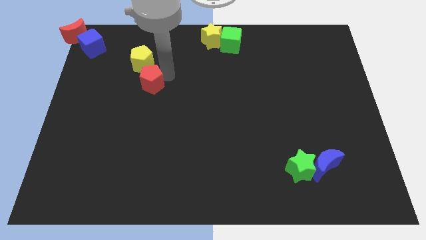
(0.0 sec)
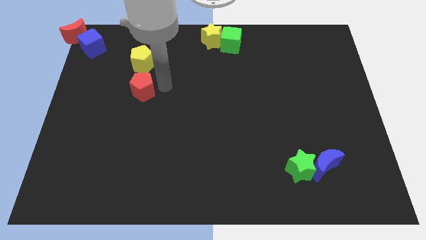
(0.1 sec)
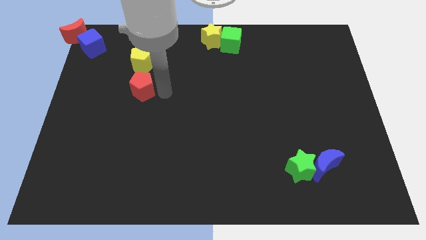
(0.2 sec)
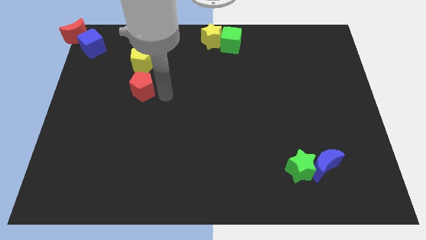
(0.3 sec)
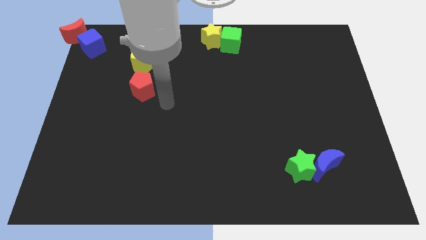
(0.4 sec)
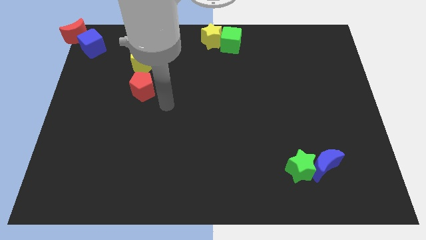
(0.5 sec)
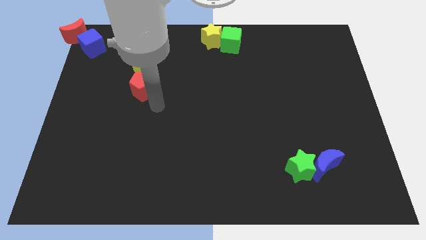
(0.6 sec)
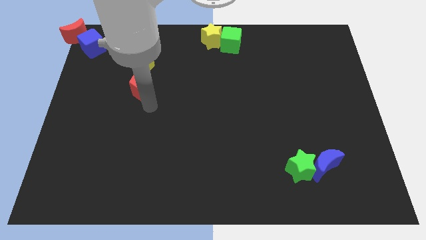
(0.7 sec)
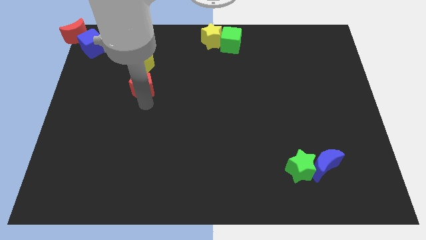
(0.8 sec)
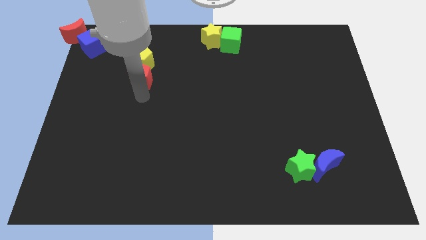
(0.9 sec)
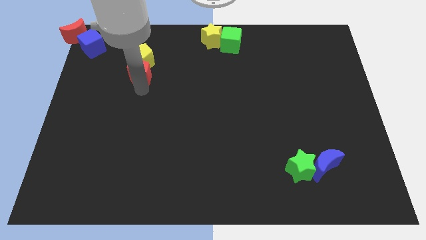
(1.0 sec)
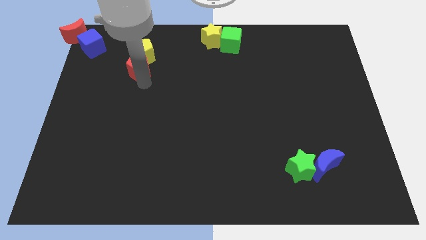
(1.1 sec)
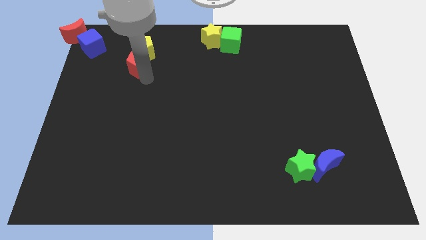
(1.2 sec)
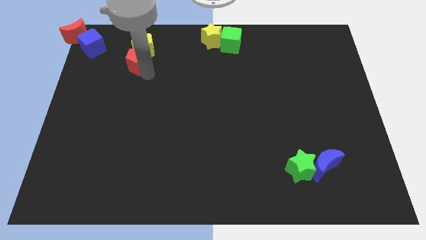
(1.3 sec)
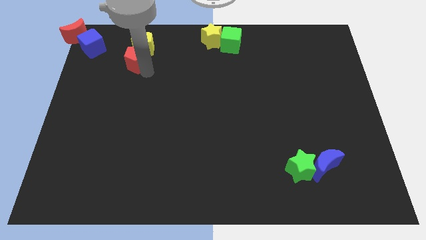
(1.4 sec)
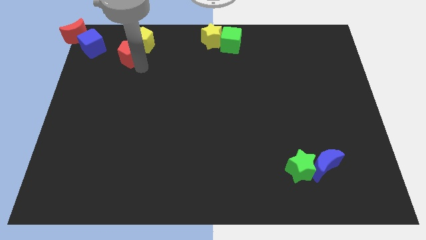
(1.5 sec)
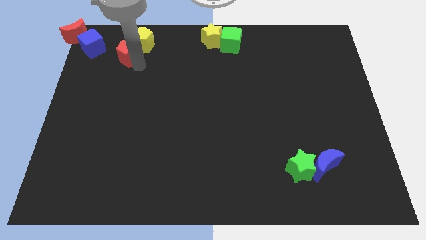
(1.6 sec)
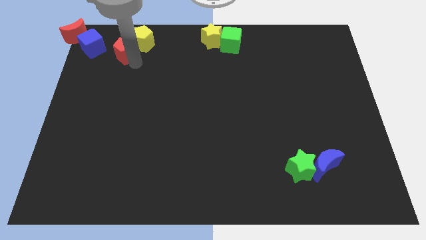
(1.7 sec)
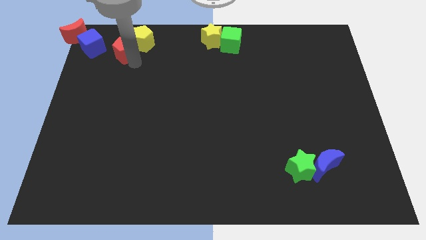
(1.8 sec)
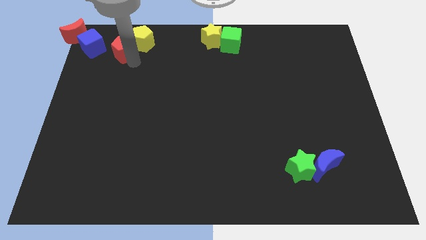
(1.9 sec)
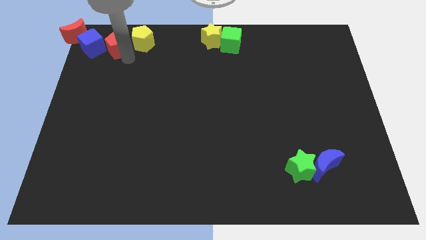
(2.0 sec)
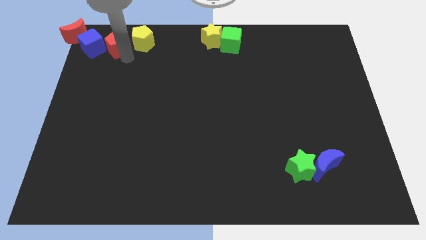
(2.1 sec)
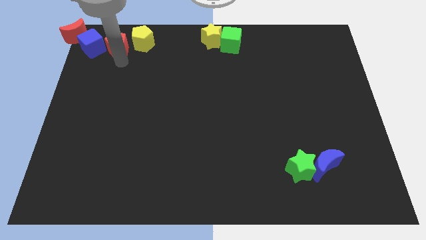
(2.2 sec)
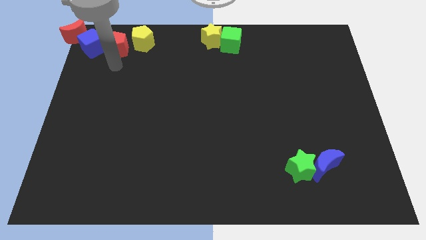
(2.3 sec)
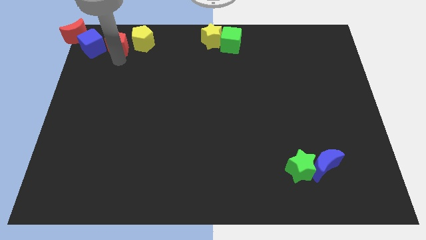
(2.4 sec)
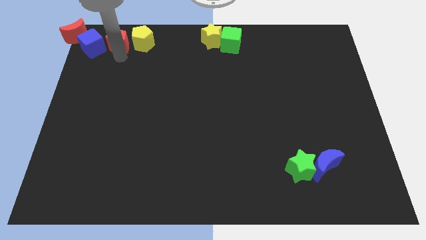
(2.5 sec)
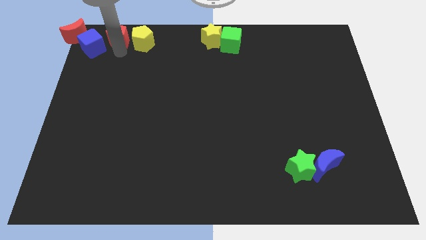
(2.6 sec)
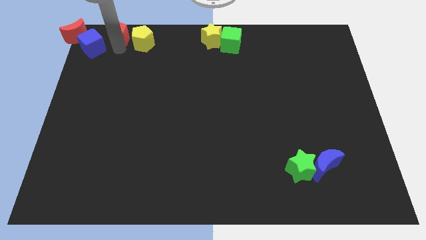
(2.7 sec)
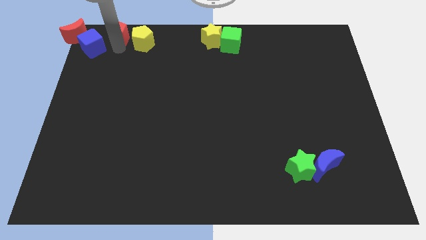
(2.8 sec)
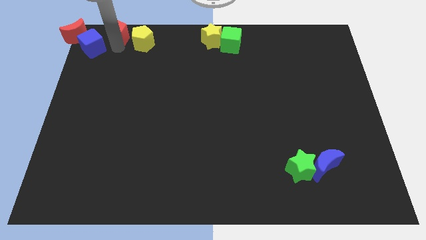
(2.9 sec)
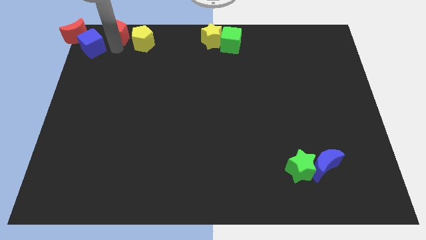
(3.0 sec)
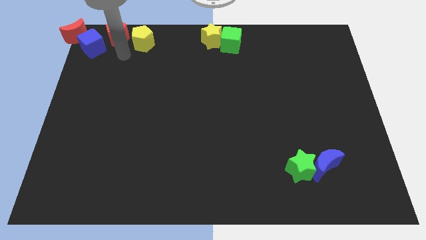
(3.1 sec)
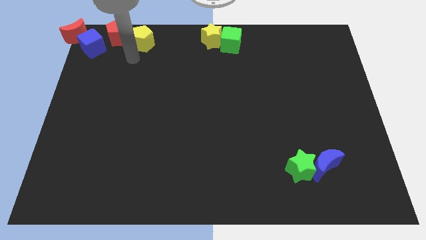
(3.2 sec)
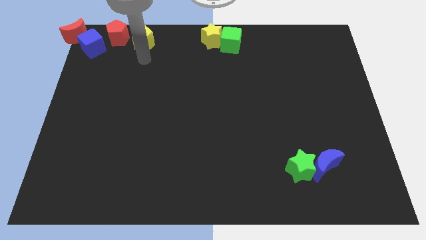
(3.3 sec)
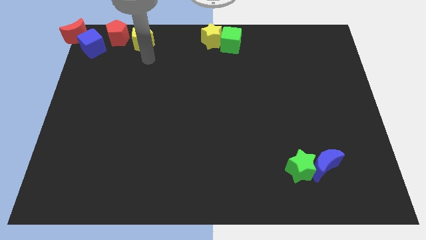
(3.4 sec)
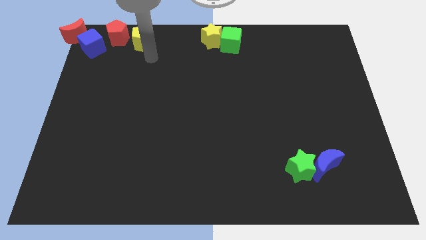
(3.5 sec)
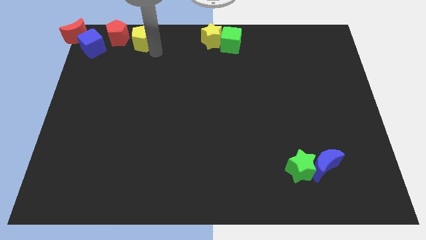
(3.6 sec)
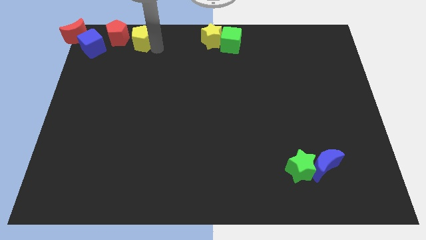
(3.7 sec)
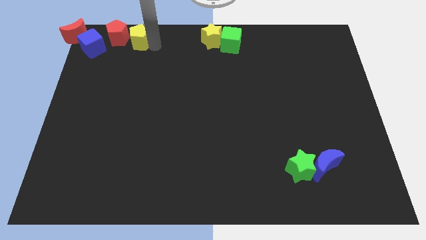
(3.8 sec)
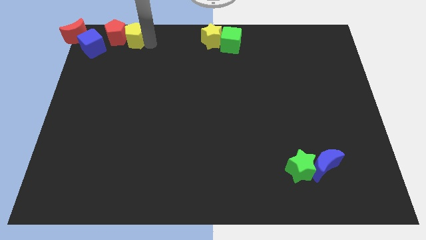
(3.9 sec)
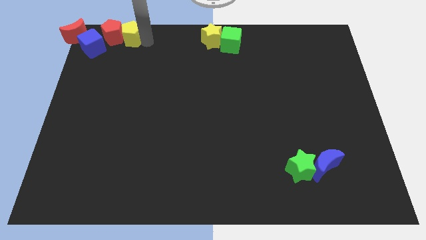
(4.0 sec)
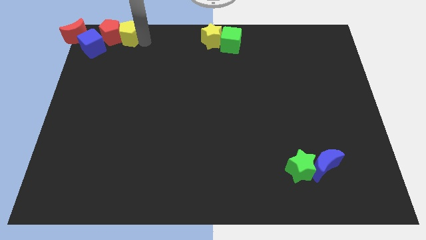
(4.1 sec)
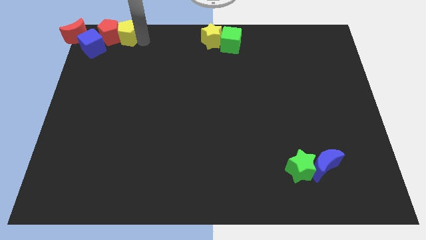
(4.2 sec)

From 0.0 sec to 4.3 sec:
place the pentagons at the top left corner of the board

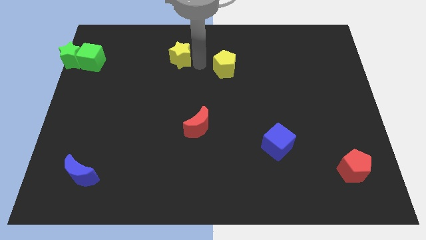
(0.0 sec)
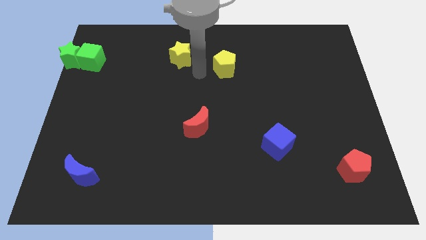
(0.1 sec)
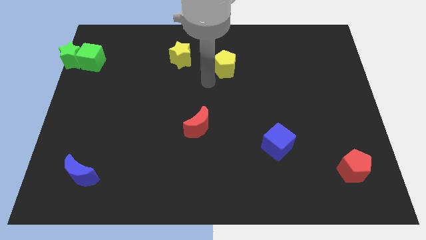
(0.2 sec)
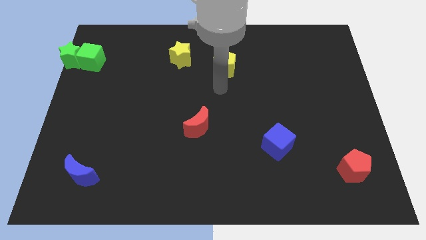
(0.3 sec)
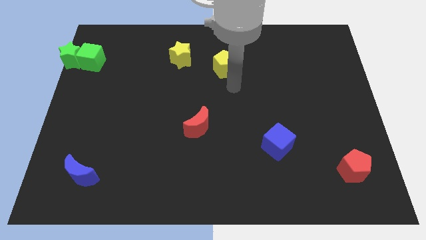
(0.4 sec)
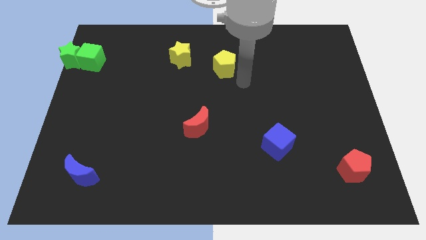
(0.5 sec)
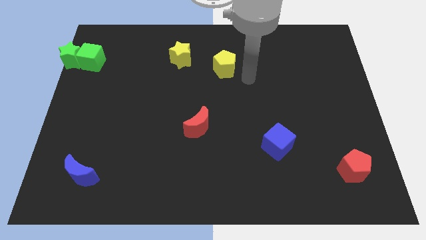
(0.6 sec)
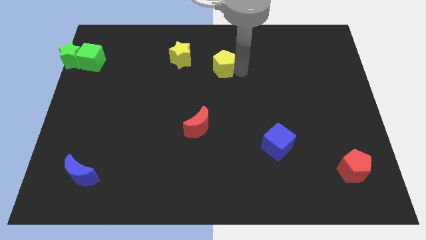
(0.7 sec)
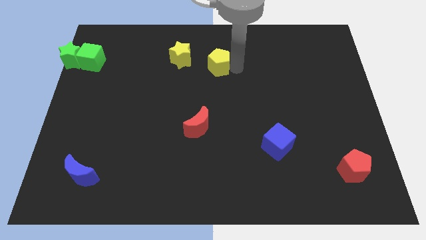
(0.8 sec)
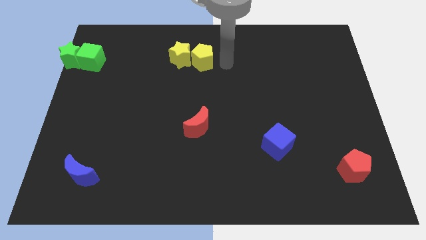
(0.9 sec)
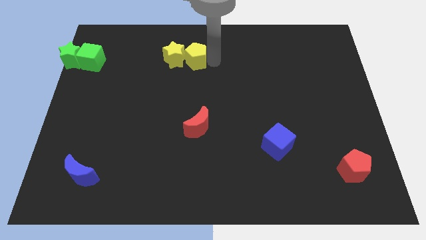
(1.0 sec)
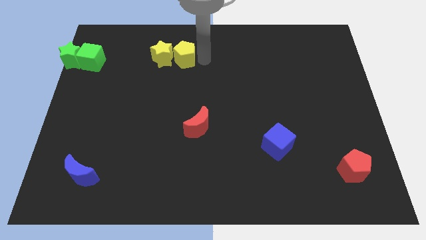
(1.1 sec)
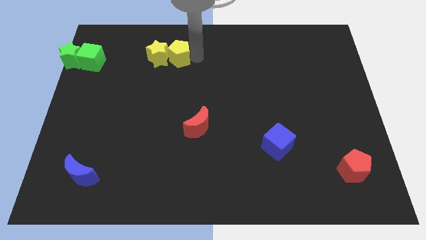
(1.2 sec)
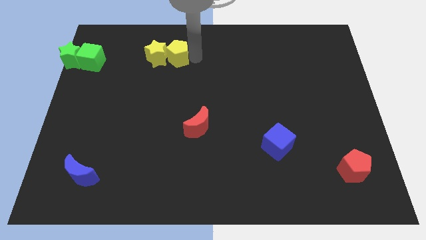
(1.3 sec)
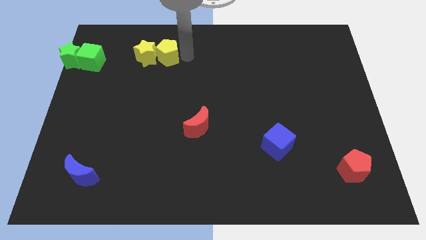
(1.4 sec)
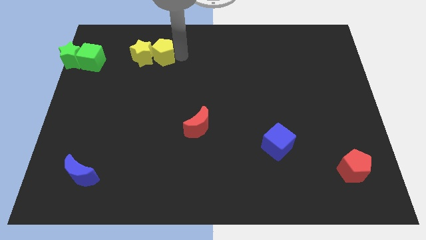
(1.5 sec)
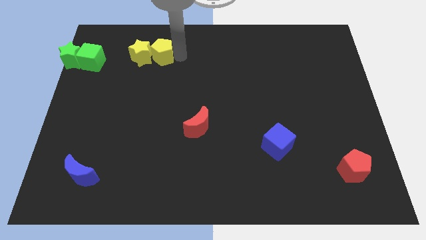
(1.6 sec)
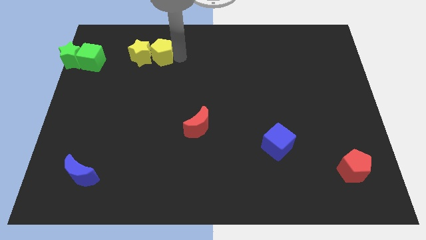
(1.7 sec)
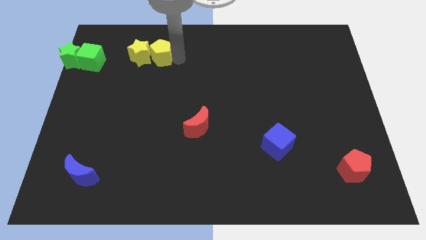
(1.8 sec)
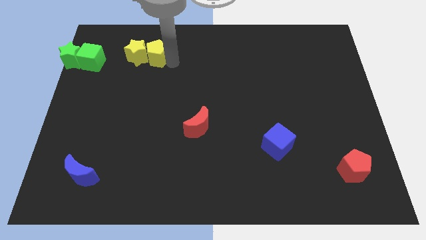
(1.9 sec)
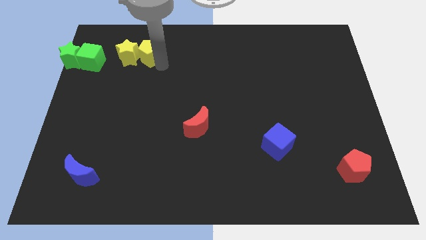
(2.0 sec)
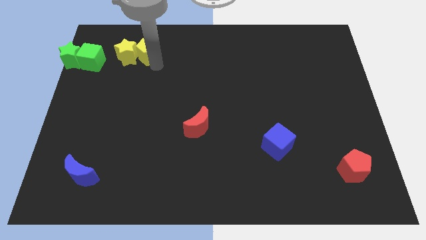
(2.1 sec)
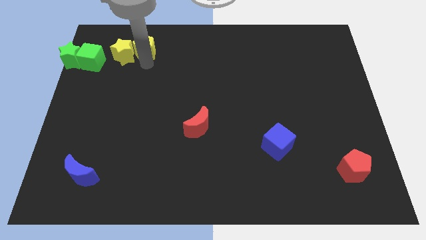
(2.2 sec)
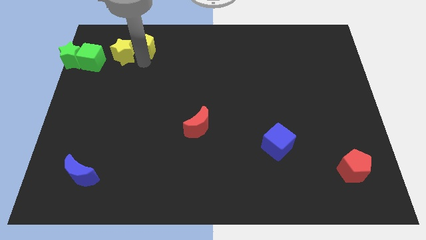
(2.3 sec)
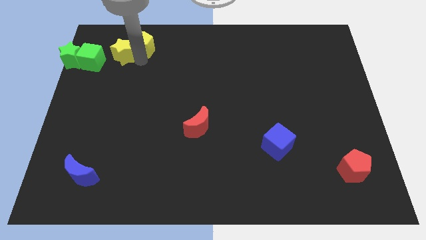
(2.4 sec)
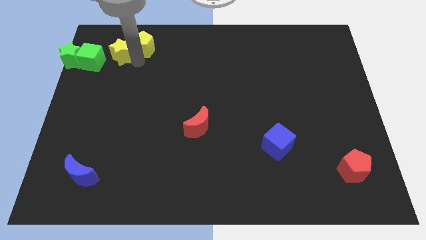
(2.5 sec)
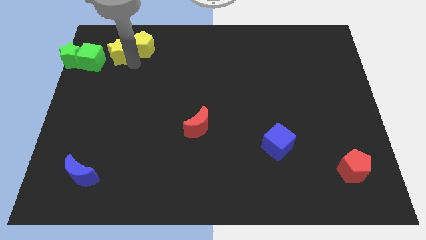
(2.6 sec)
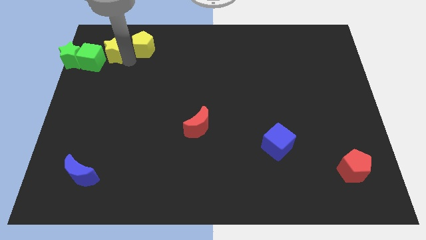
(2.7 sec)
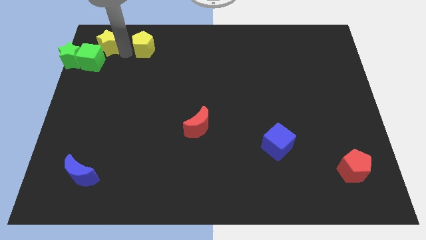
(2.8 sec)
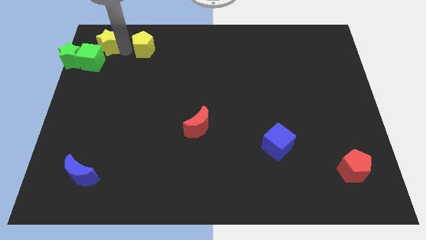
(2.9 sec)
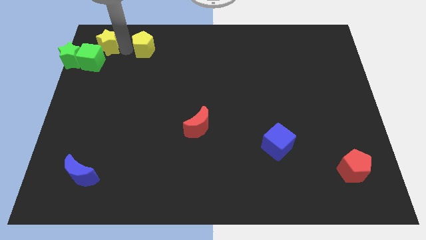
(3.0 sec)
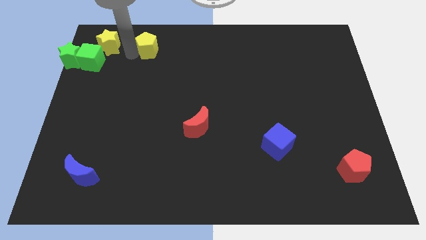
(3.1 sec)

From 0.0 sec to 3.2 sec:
push yellow star along with yellow pentagon towards top left corner

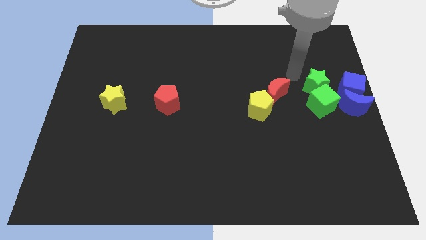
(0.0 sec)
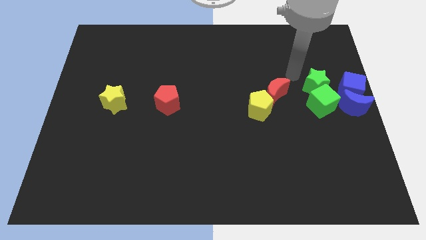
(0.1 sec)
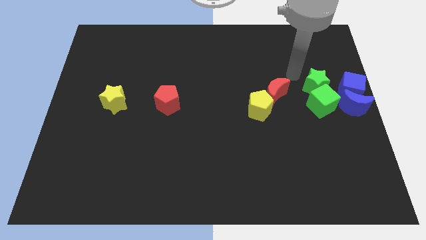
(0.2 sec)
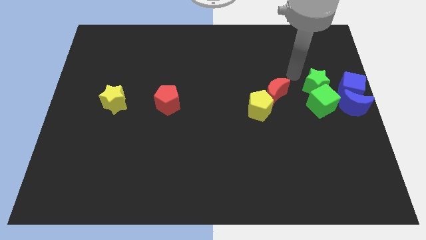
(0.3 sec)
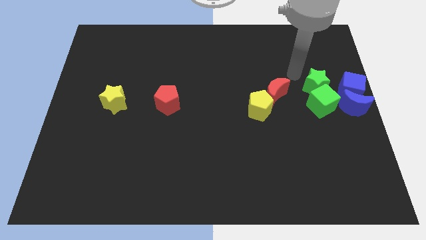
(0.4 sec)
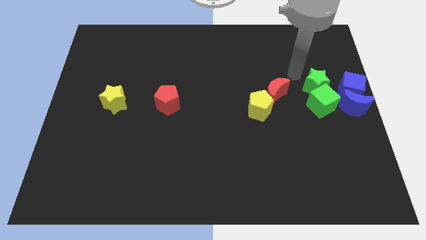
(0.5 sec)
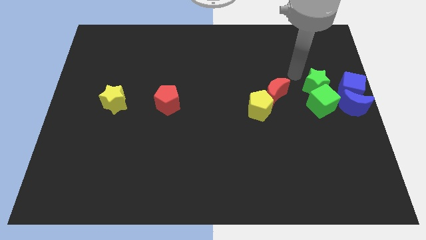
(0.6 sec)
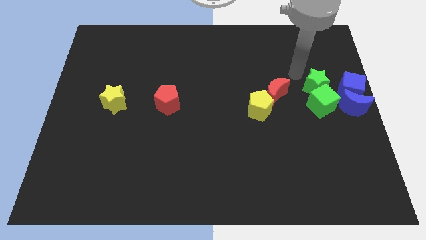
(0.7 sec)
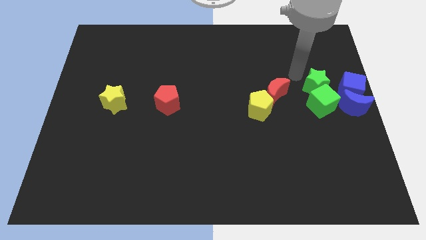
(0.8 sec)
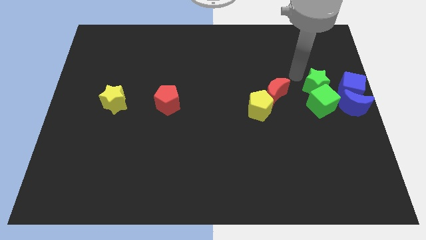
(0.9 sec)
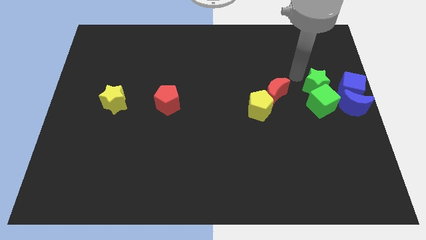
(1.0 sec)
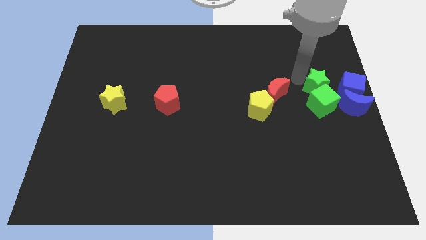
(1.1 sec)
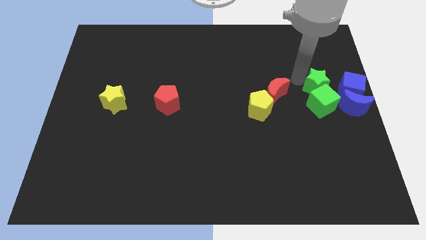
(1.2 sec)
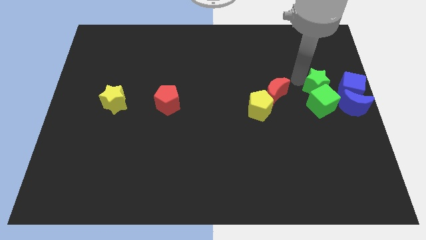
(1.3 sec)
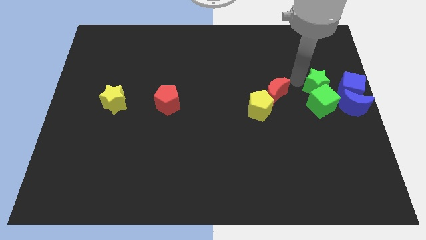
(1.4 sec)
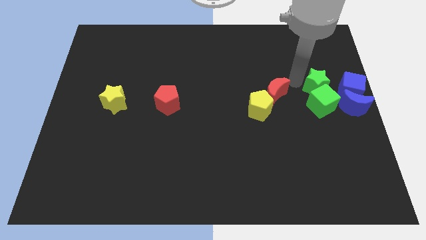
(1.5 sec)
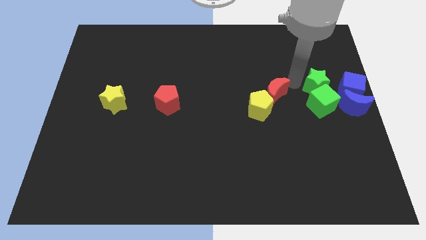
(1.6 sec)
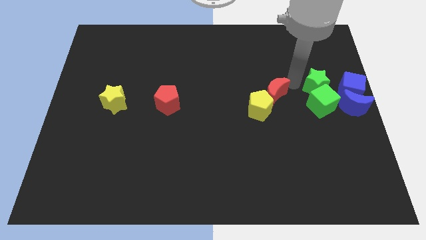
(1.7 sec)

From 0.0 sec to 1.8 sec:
place your arm in between the green star and red crescent
